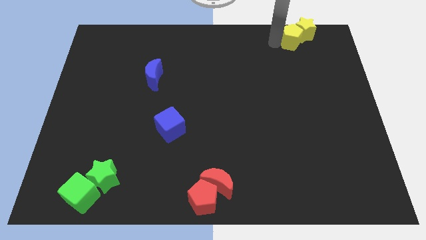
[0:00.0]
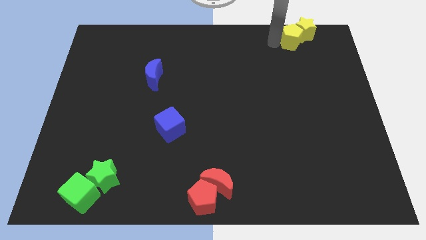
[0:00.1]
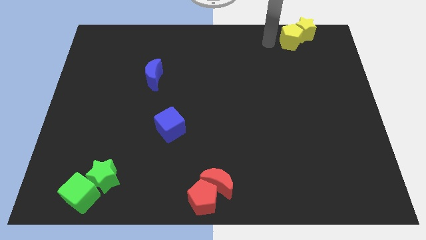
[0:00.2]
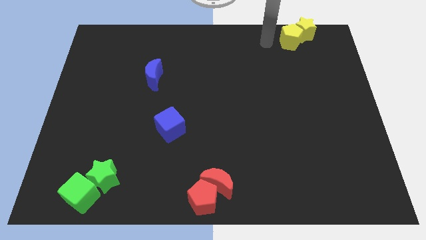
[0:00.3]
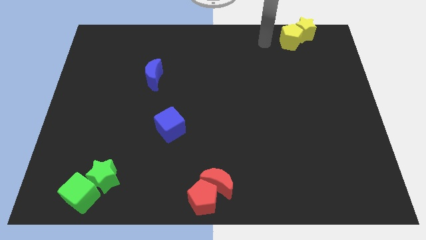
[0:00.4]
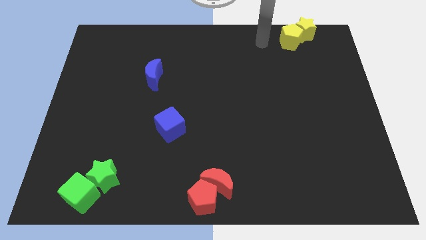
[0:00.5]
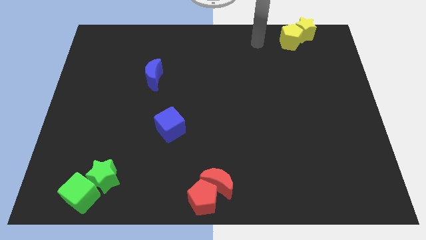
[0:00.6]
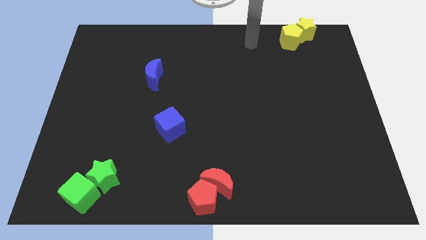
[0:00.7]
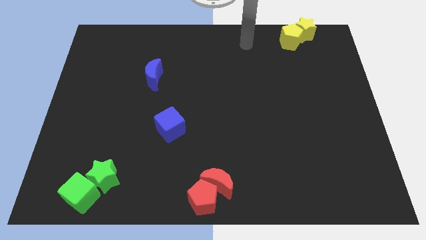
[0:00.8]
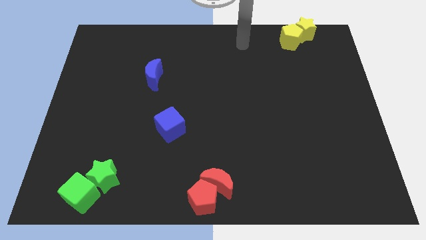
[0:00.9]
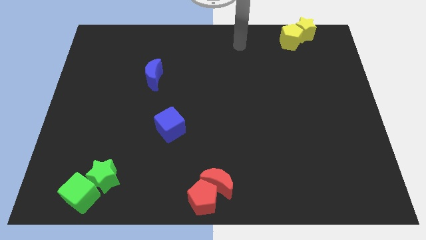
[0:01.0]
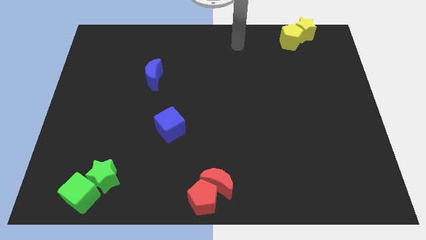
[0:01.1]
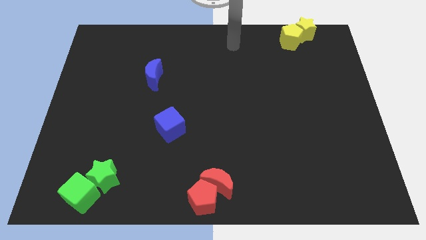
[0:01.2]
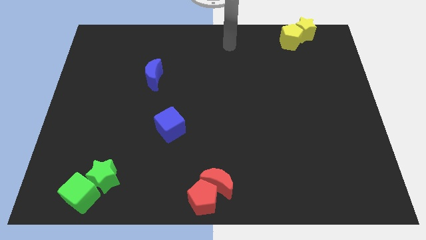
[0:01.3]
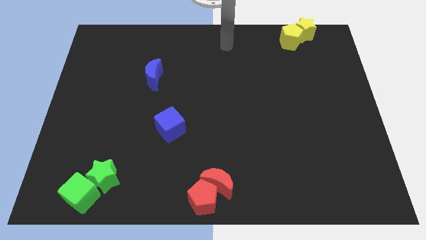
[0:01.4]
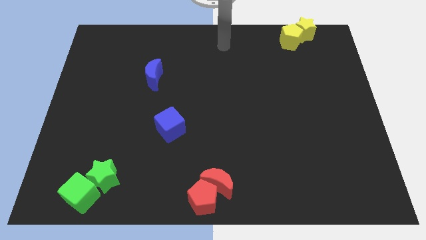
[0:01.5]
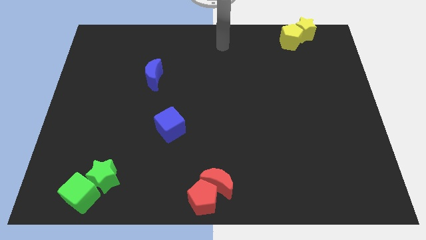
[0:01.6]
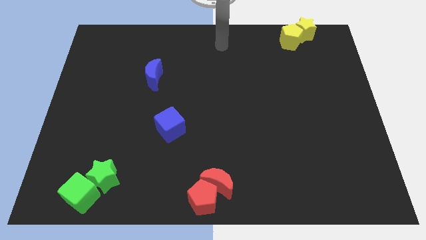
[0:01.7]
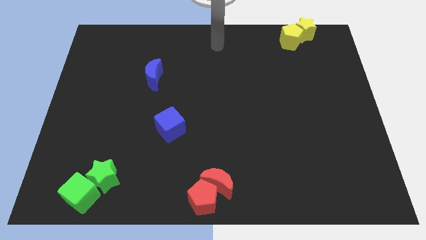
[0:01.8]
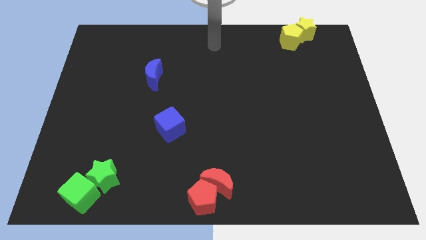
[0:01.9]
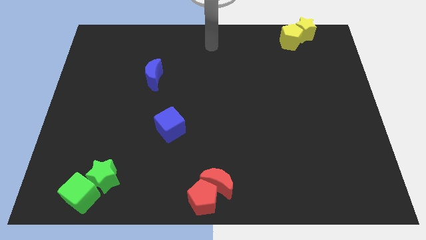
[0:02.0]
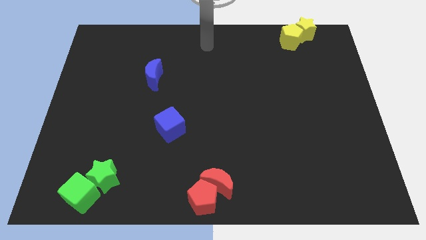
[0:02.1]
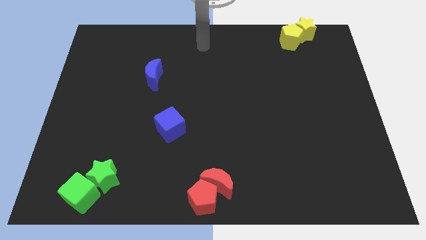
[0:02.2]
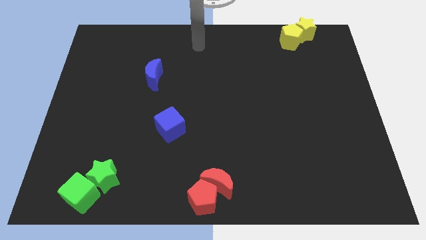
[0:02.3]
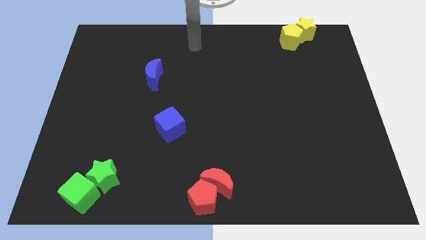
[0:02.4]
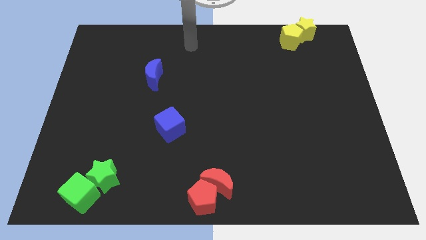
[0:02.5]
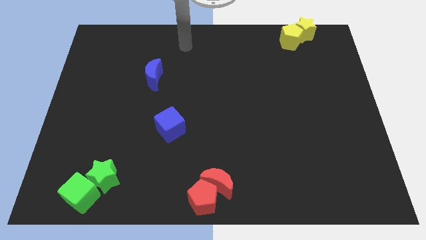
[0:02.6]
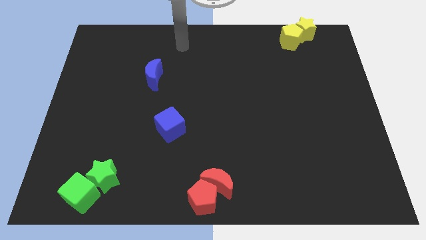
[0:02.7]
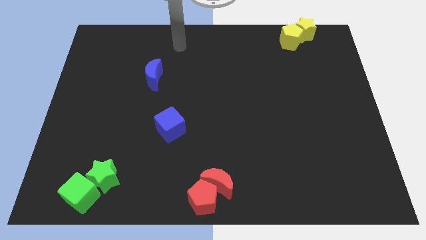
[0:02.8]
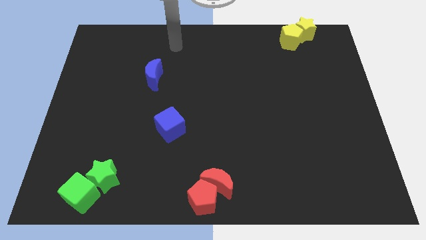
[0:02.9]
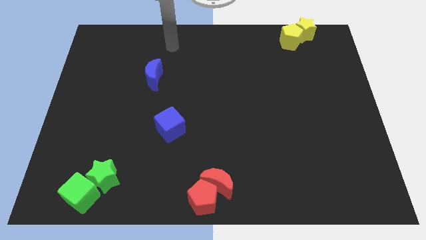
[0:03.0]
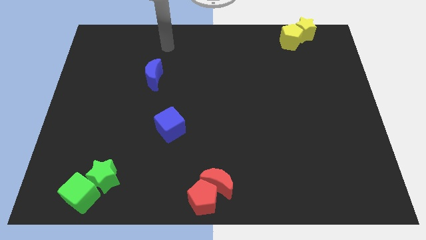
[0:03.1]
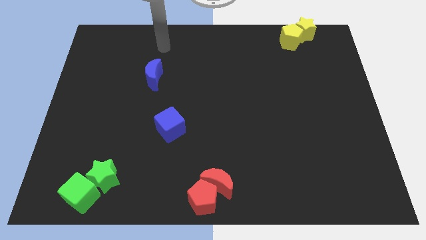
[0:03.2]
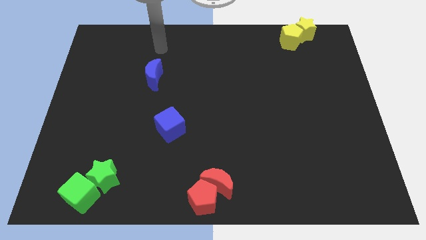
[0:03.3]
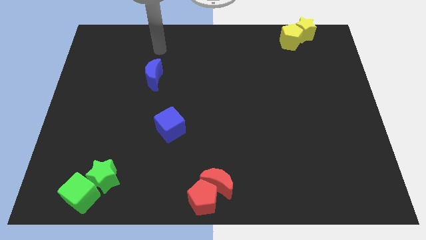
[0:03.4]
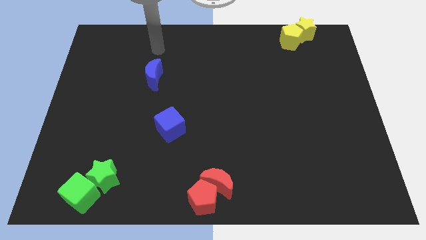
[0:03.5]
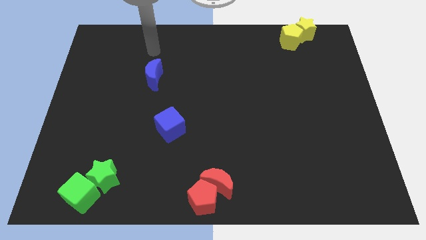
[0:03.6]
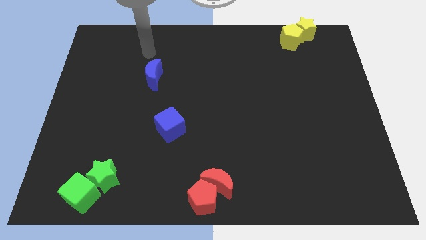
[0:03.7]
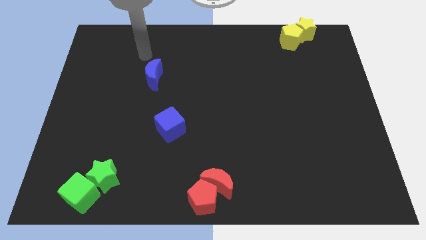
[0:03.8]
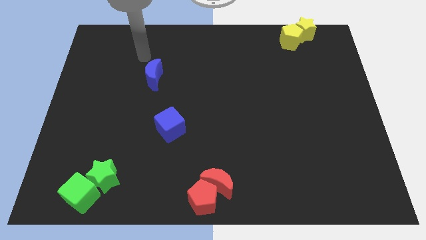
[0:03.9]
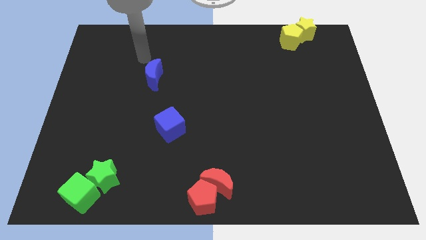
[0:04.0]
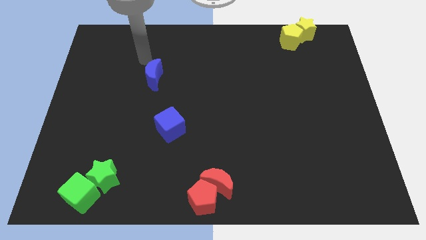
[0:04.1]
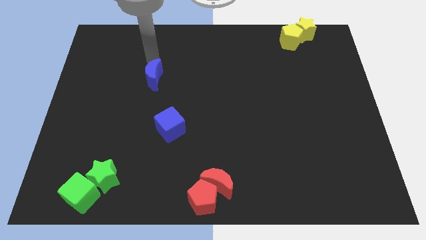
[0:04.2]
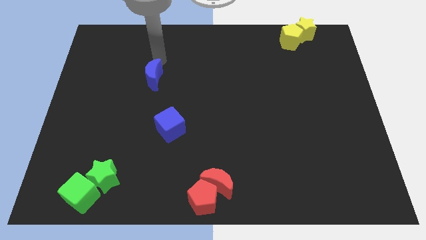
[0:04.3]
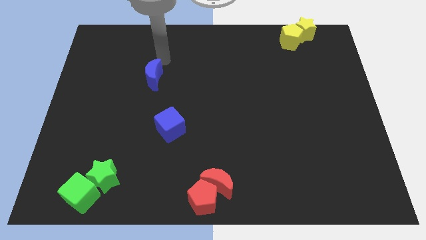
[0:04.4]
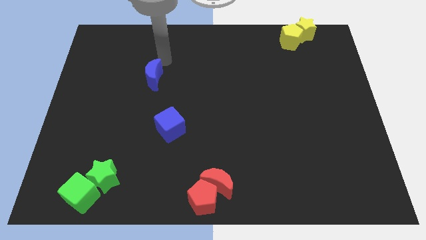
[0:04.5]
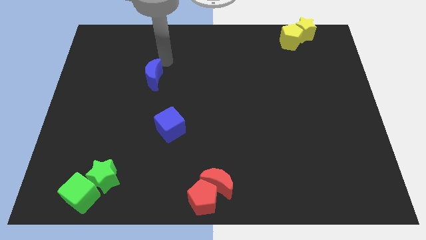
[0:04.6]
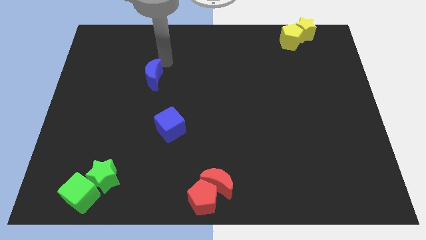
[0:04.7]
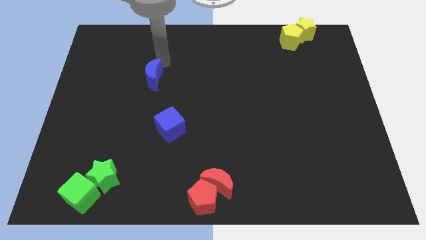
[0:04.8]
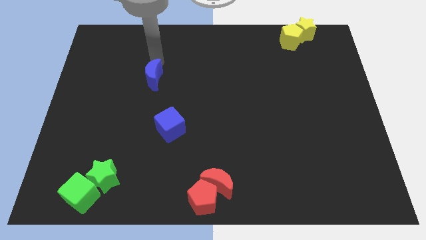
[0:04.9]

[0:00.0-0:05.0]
point your arm to the top side of the red moon

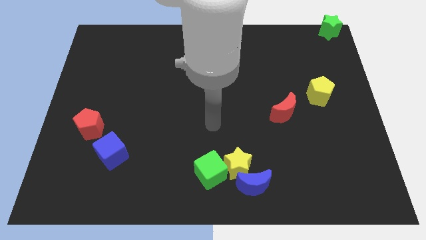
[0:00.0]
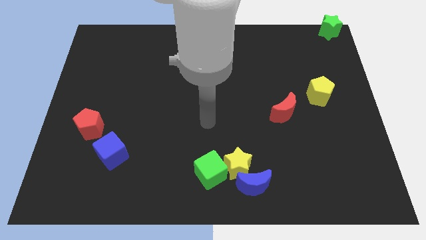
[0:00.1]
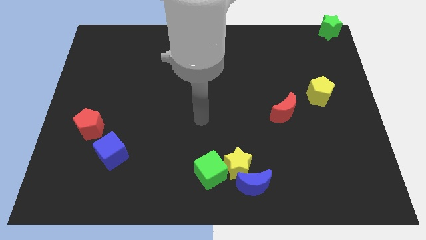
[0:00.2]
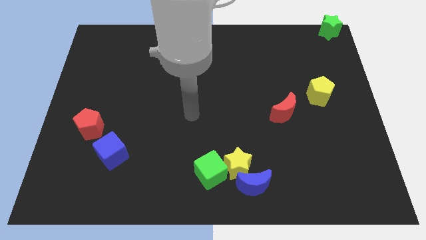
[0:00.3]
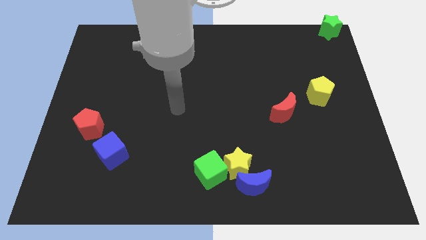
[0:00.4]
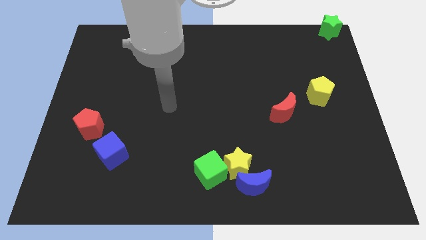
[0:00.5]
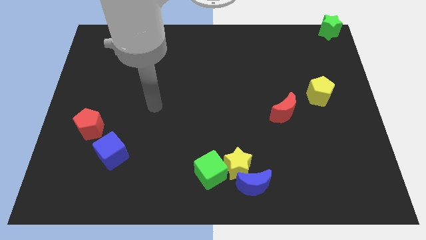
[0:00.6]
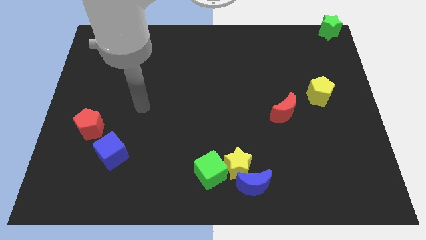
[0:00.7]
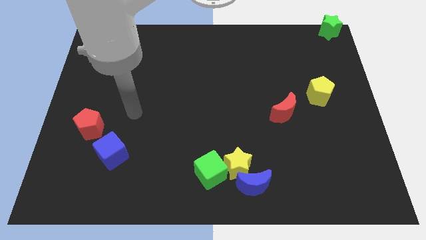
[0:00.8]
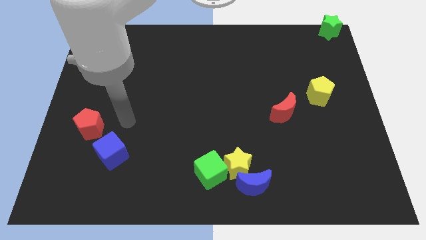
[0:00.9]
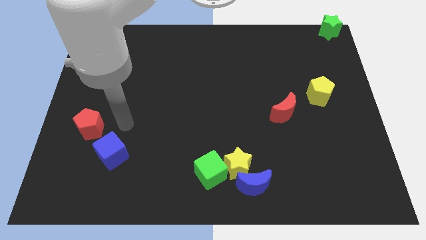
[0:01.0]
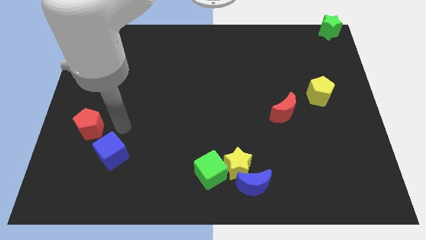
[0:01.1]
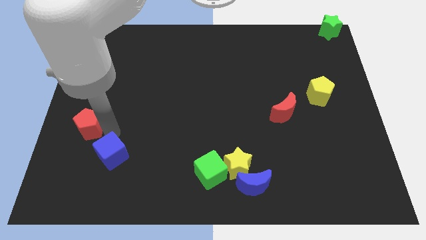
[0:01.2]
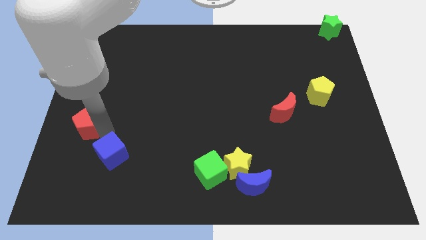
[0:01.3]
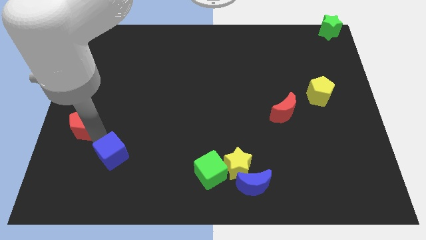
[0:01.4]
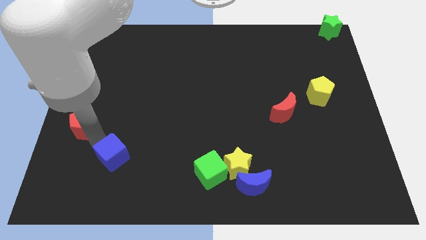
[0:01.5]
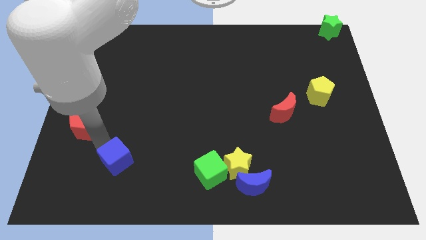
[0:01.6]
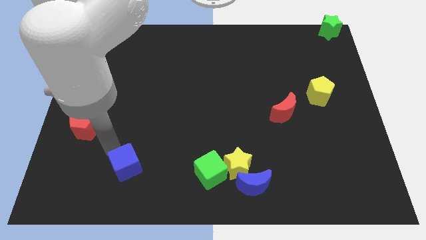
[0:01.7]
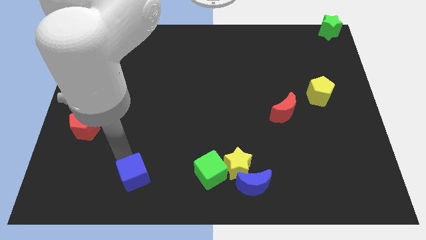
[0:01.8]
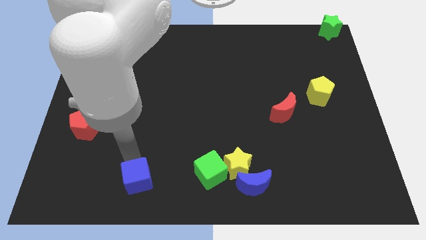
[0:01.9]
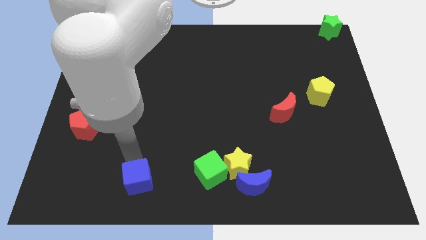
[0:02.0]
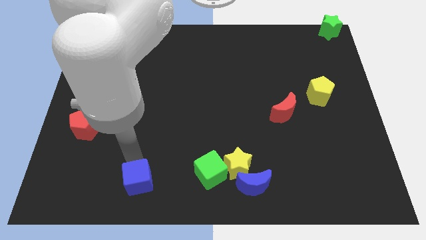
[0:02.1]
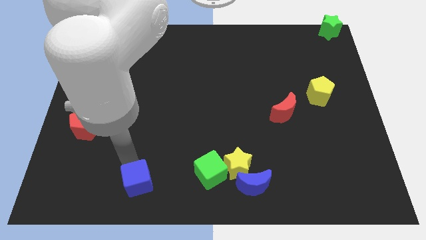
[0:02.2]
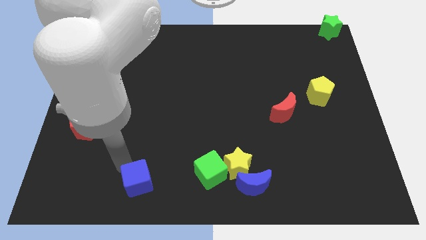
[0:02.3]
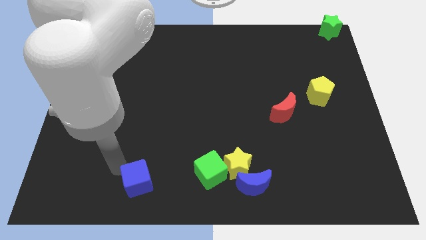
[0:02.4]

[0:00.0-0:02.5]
separate the blue cube and red pentagon

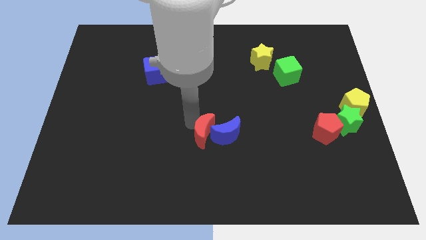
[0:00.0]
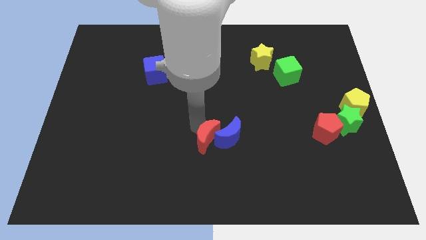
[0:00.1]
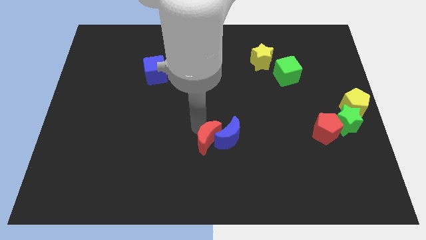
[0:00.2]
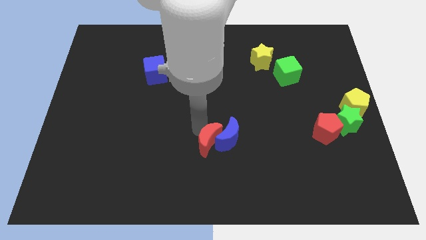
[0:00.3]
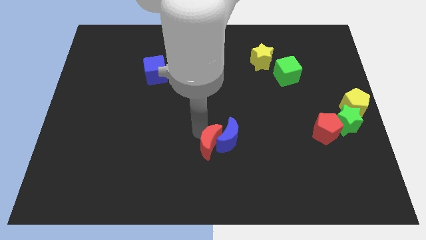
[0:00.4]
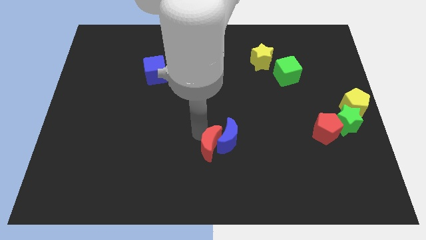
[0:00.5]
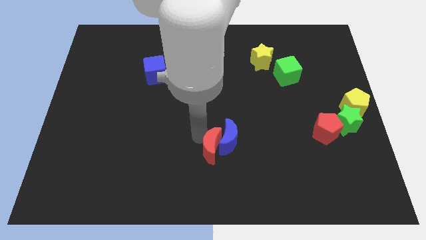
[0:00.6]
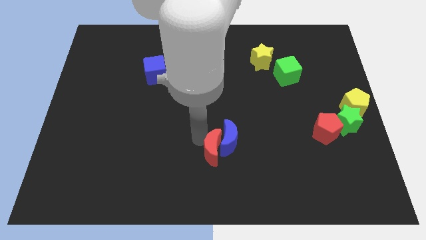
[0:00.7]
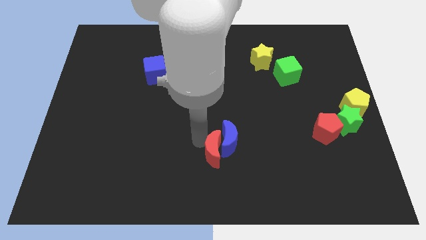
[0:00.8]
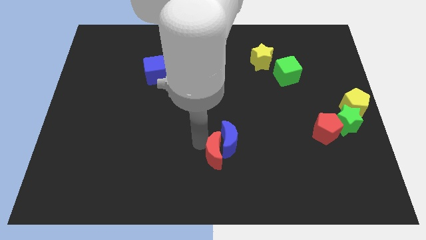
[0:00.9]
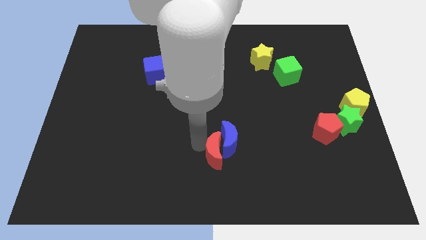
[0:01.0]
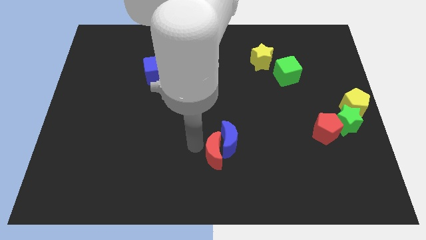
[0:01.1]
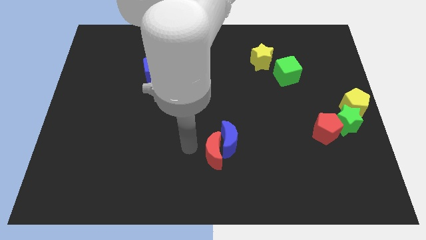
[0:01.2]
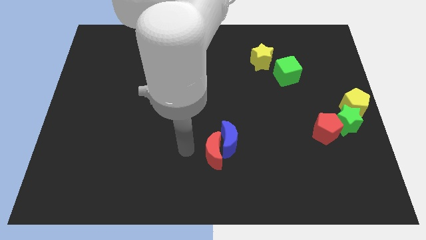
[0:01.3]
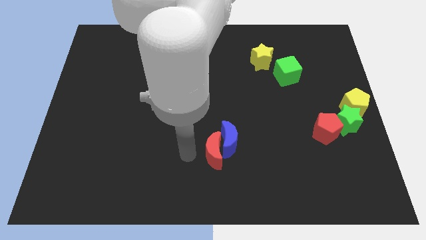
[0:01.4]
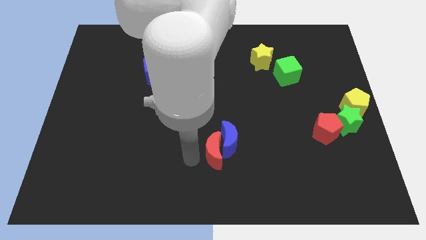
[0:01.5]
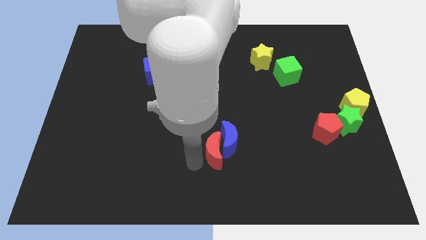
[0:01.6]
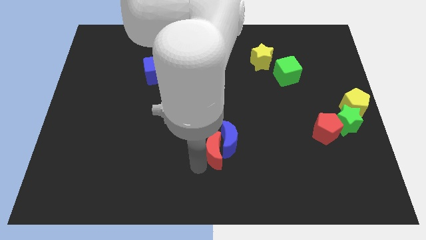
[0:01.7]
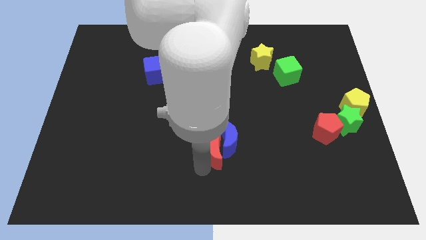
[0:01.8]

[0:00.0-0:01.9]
move the red crescent to the left of blue crescent
